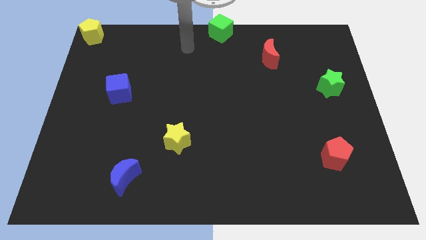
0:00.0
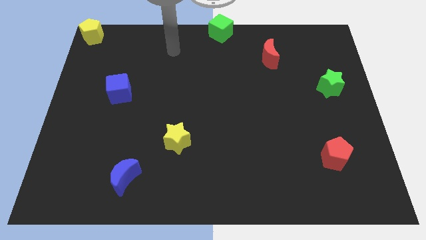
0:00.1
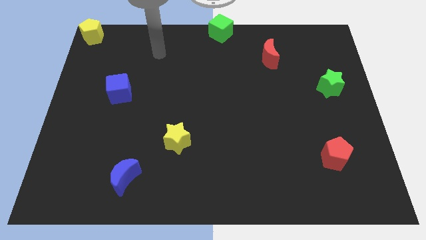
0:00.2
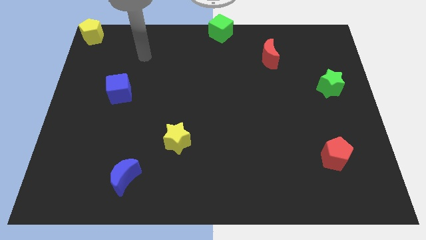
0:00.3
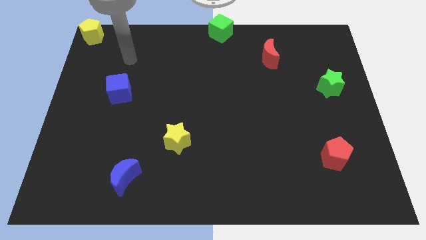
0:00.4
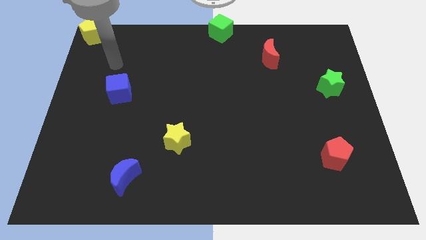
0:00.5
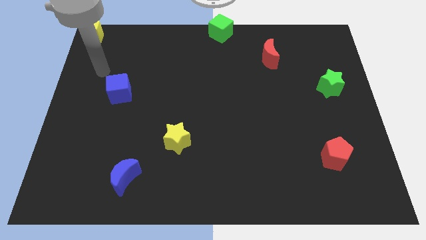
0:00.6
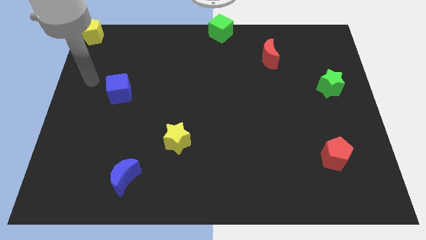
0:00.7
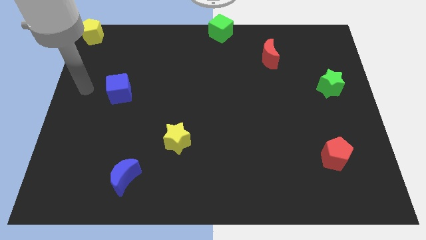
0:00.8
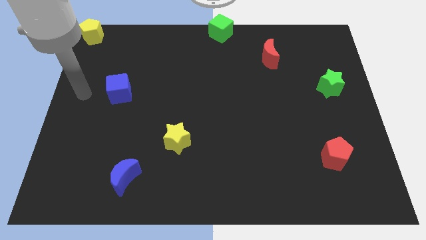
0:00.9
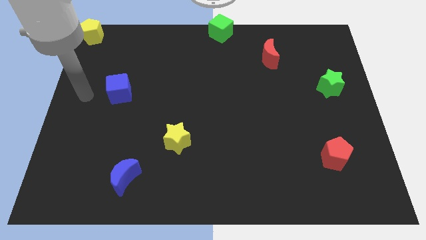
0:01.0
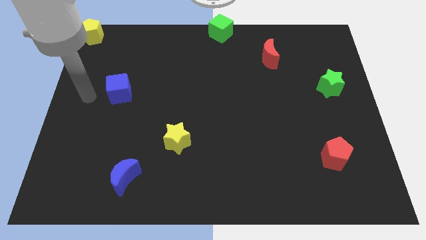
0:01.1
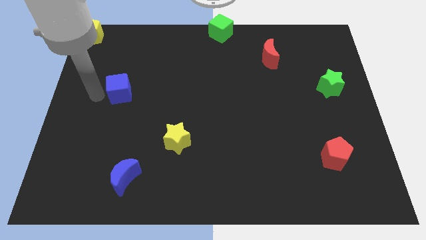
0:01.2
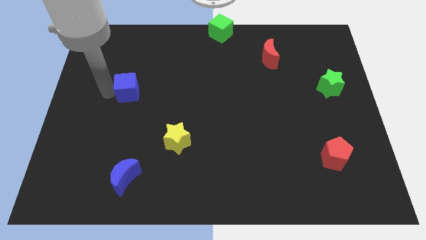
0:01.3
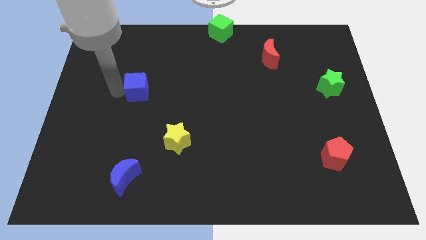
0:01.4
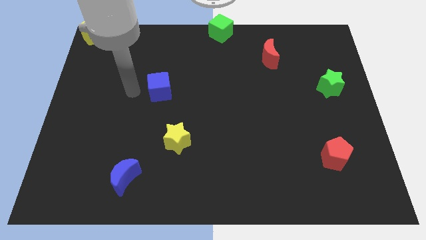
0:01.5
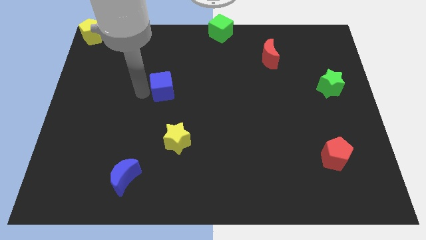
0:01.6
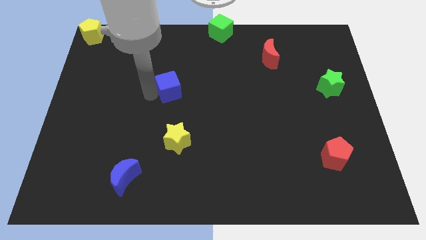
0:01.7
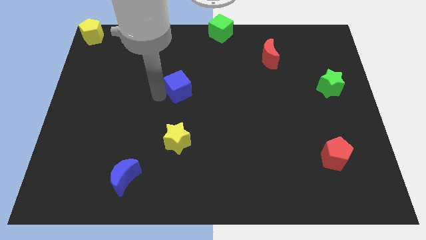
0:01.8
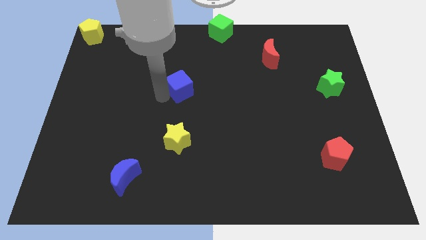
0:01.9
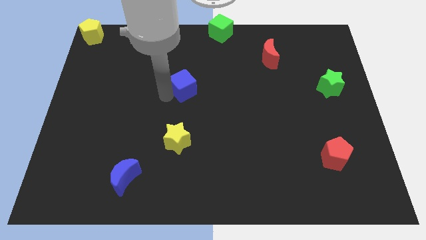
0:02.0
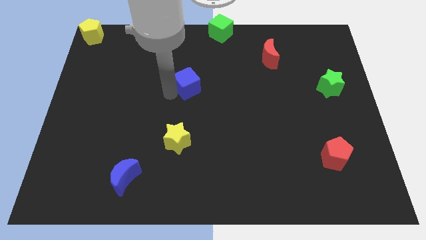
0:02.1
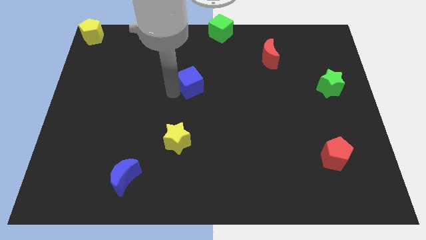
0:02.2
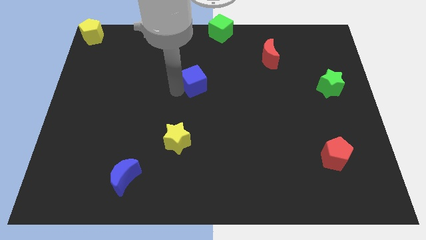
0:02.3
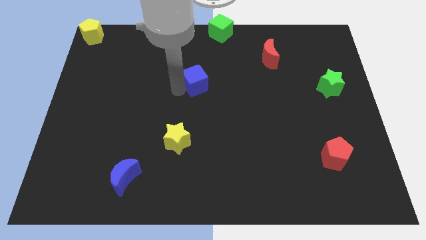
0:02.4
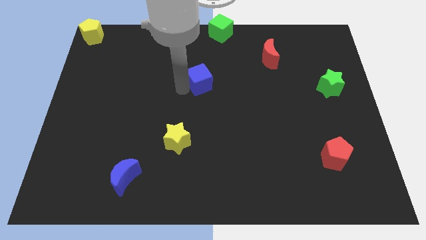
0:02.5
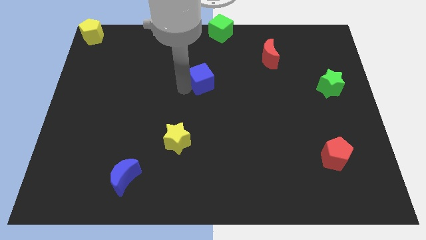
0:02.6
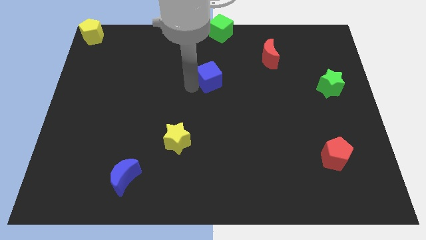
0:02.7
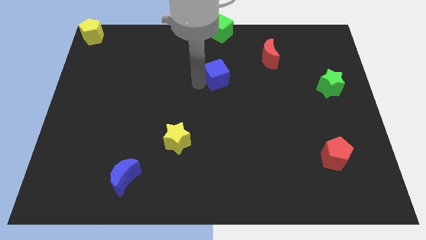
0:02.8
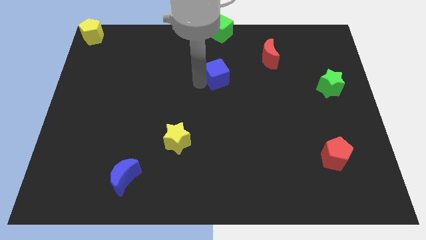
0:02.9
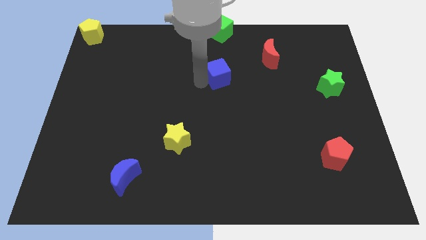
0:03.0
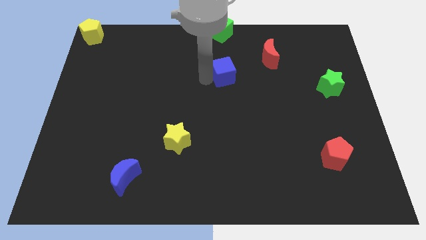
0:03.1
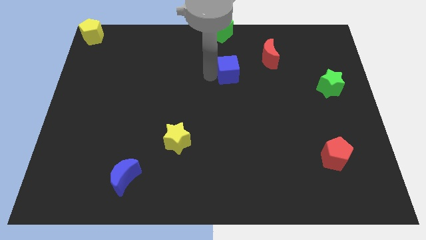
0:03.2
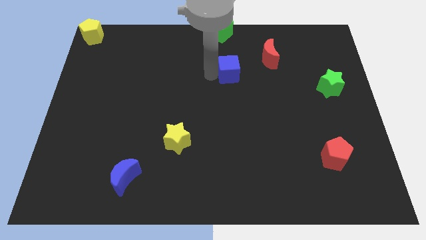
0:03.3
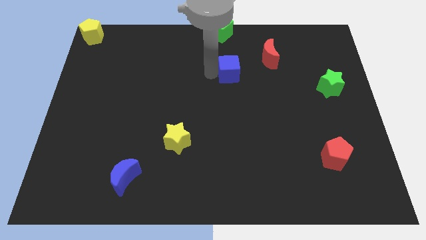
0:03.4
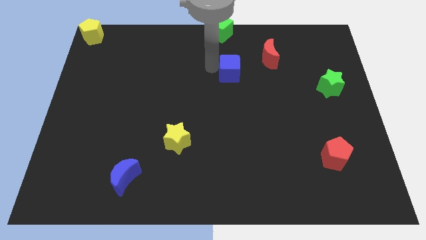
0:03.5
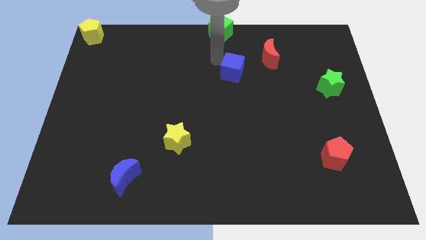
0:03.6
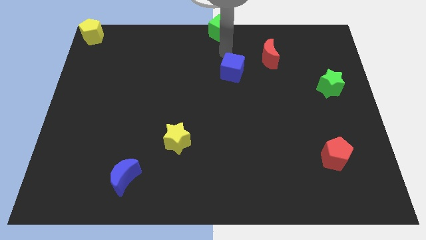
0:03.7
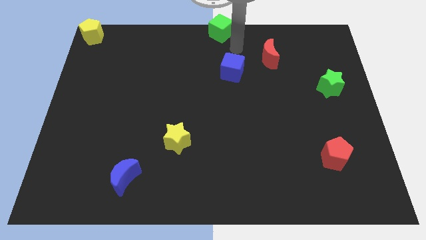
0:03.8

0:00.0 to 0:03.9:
place the blue cube underneath the green cube

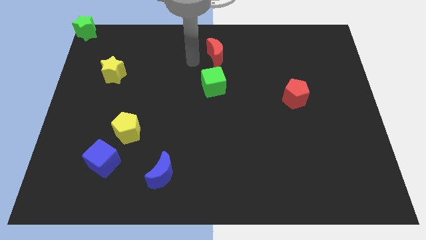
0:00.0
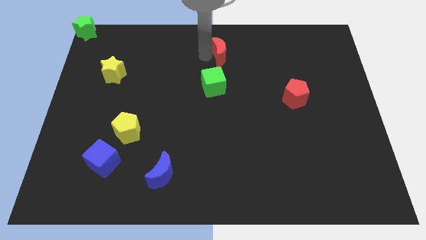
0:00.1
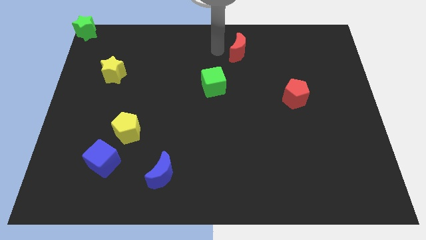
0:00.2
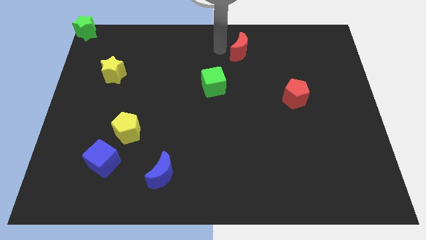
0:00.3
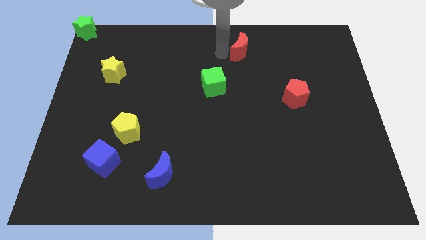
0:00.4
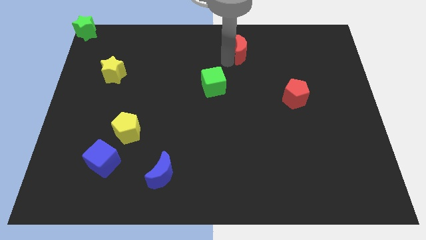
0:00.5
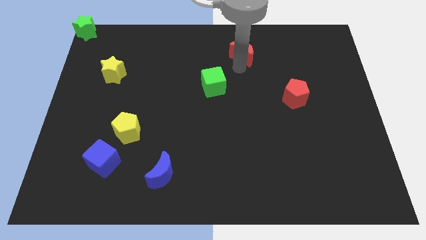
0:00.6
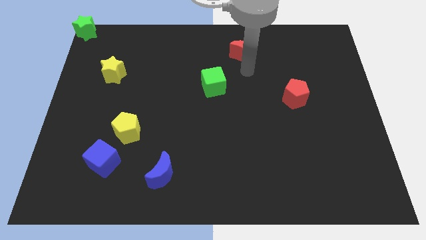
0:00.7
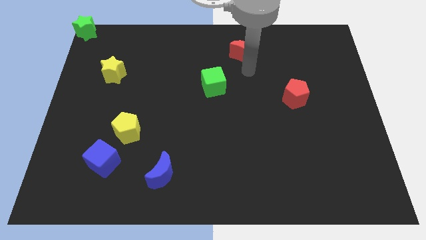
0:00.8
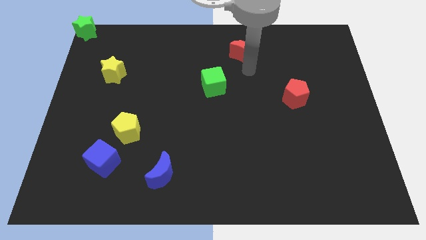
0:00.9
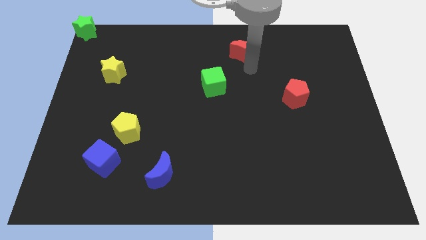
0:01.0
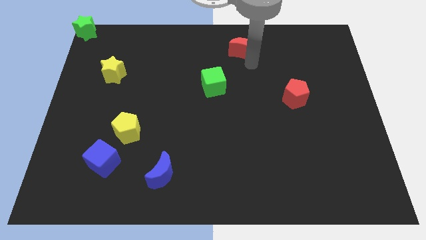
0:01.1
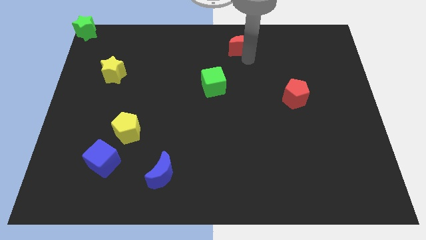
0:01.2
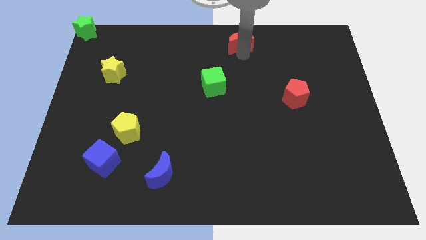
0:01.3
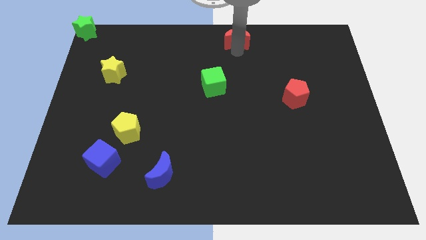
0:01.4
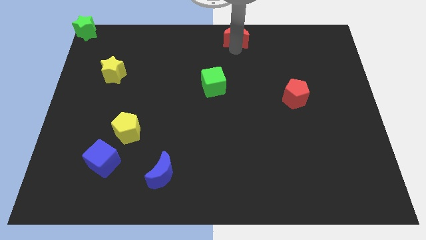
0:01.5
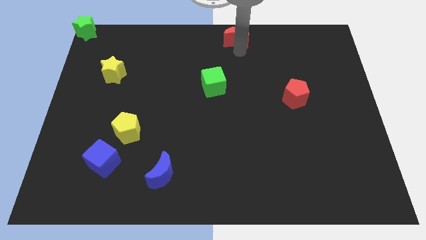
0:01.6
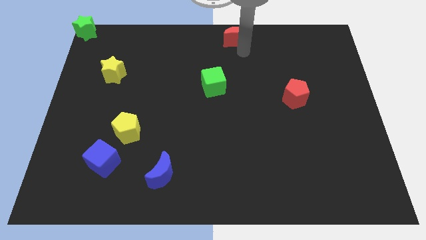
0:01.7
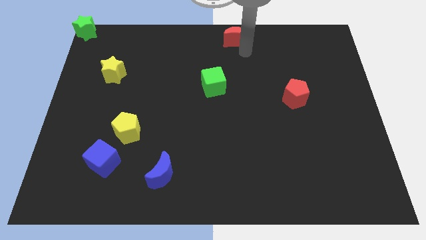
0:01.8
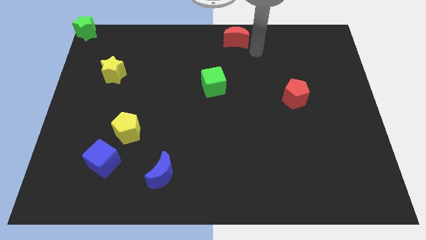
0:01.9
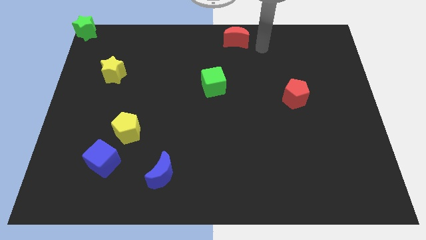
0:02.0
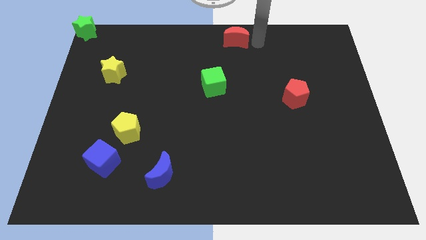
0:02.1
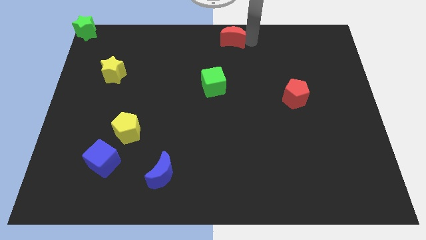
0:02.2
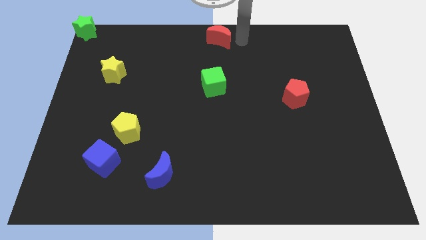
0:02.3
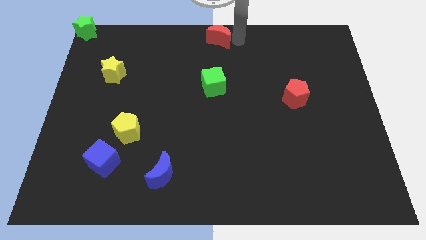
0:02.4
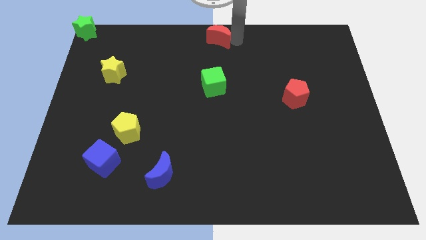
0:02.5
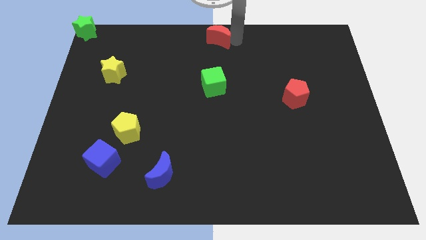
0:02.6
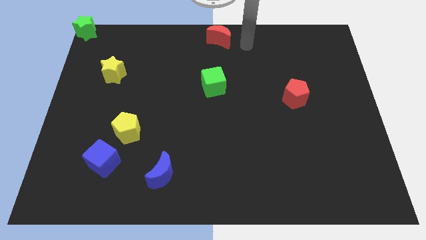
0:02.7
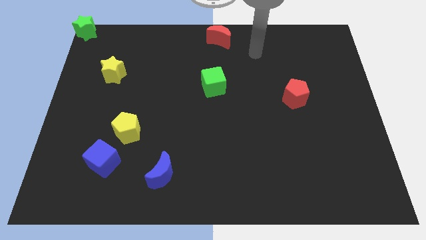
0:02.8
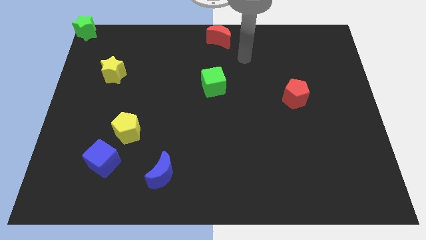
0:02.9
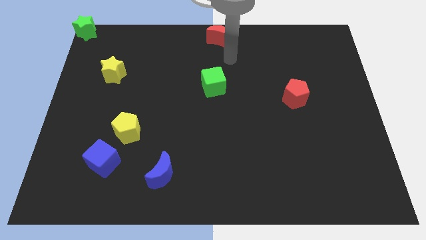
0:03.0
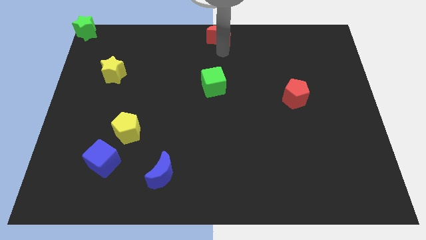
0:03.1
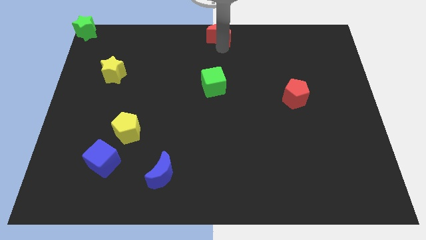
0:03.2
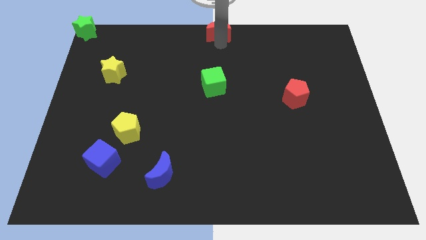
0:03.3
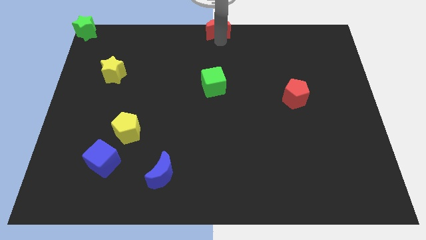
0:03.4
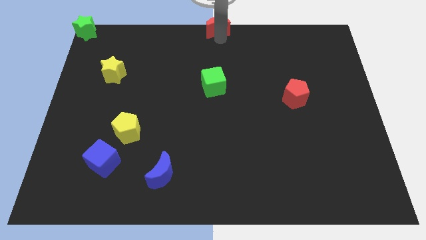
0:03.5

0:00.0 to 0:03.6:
move the red half moon towards the top center of the board

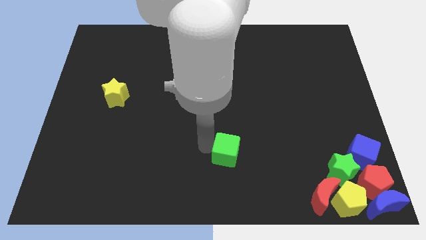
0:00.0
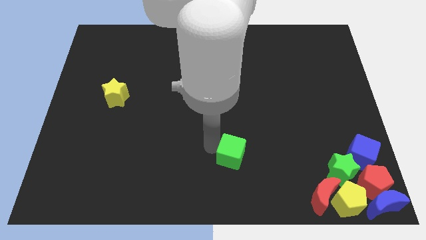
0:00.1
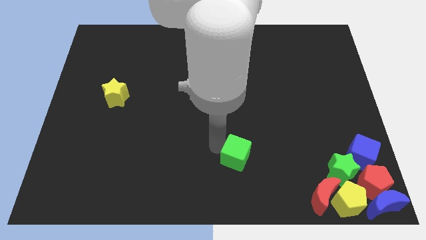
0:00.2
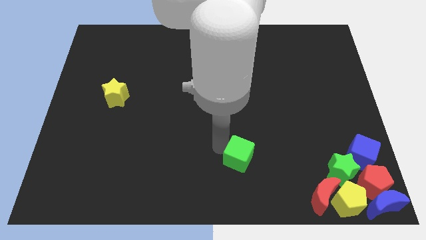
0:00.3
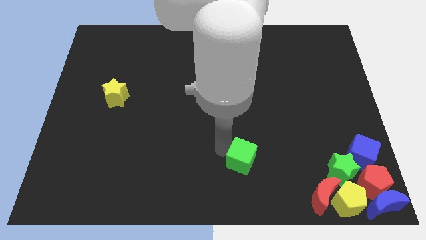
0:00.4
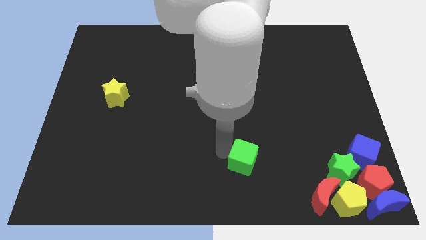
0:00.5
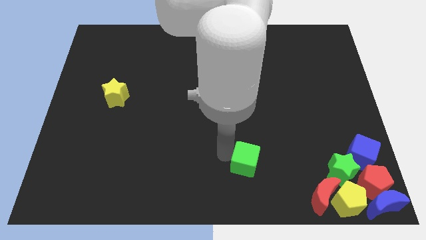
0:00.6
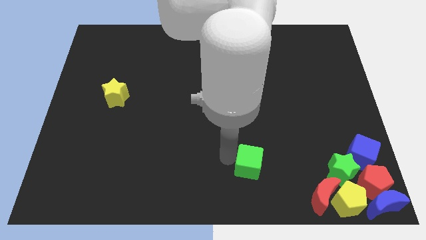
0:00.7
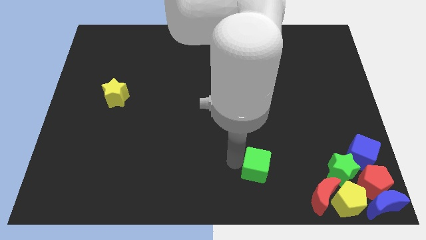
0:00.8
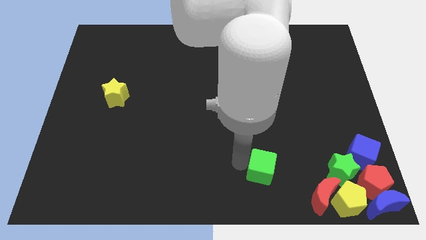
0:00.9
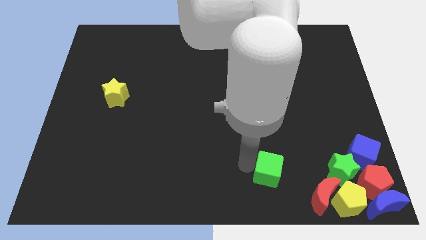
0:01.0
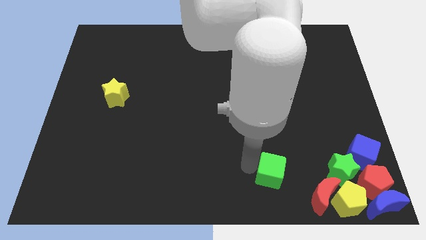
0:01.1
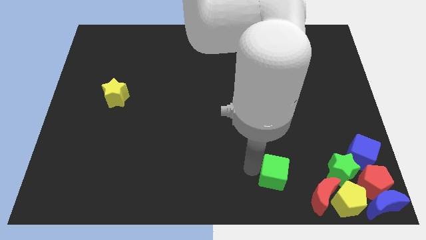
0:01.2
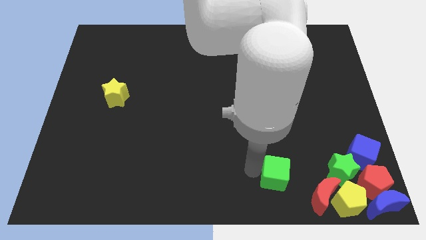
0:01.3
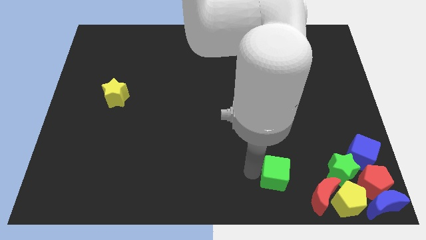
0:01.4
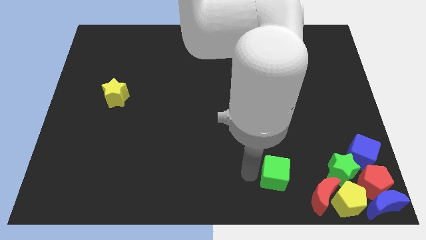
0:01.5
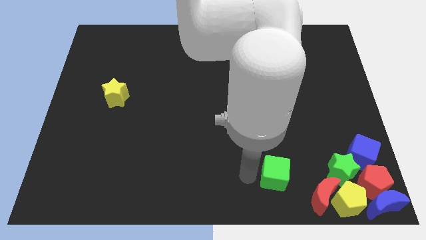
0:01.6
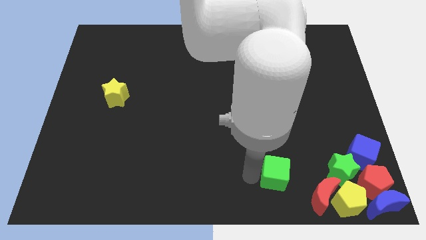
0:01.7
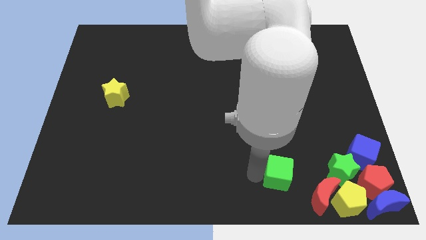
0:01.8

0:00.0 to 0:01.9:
move the green cube into the red crescent
